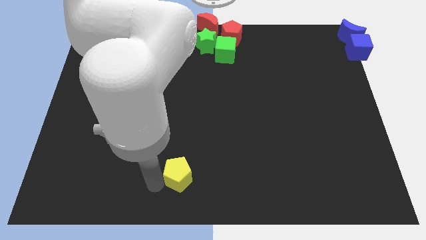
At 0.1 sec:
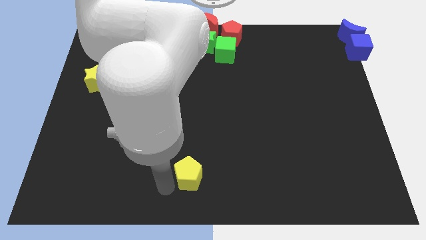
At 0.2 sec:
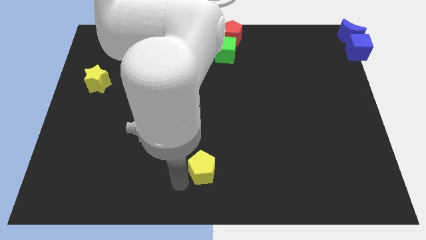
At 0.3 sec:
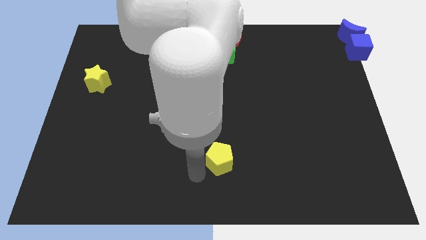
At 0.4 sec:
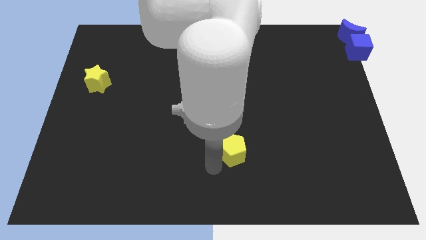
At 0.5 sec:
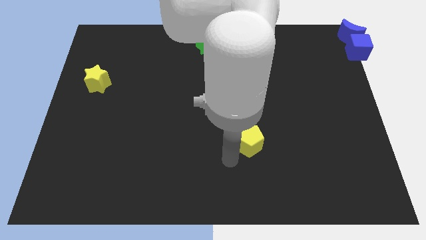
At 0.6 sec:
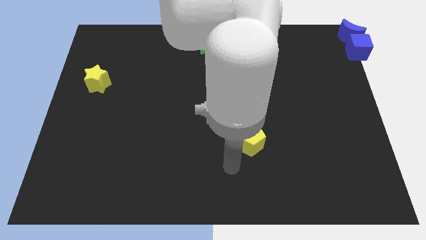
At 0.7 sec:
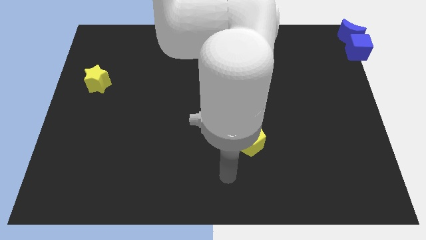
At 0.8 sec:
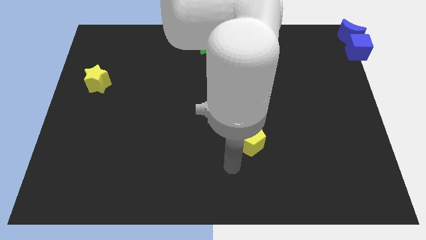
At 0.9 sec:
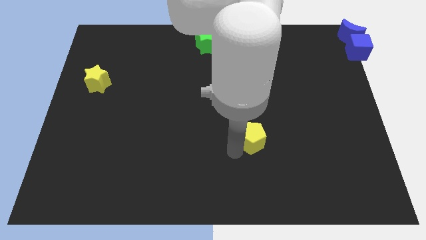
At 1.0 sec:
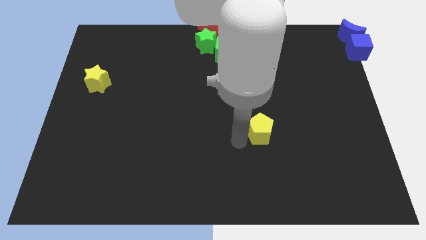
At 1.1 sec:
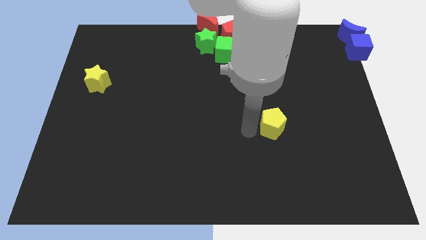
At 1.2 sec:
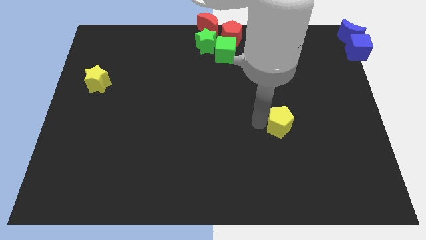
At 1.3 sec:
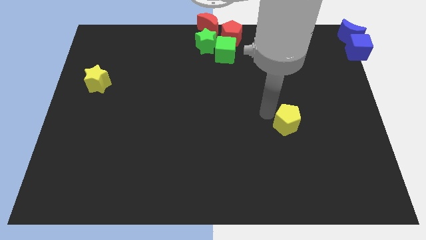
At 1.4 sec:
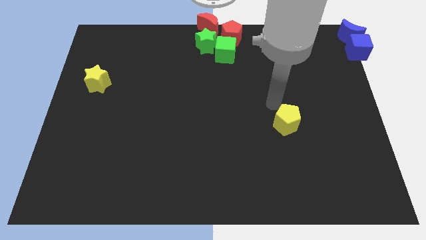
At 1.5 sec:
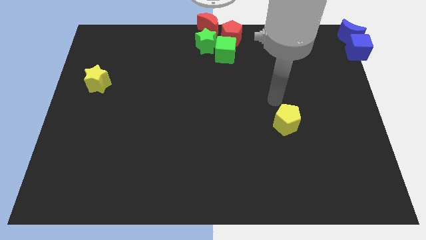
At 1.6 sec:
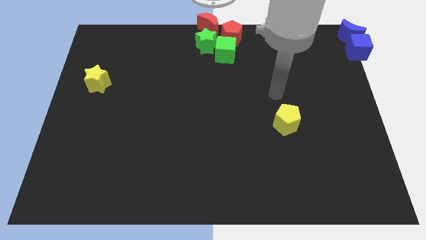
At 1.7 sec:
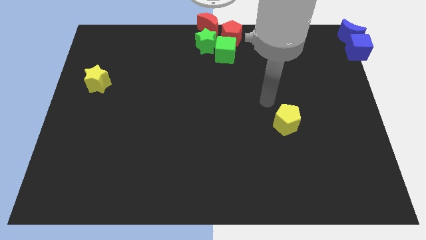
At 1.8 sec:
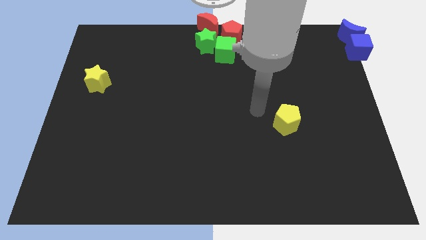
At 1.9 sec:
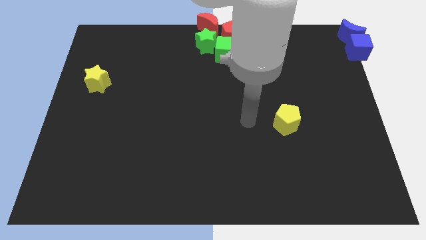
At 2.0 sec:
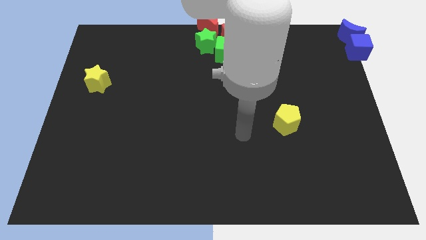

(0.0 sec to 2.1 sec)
push the yellow pentagon towards the right center of the board

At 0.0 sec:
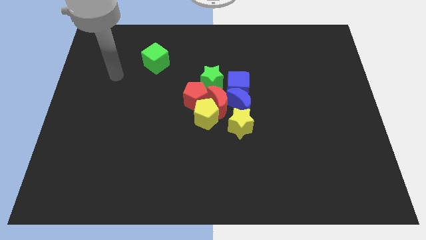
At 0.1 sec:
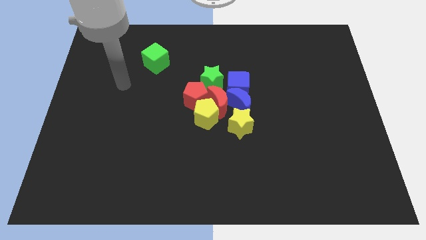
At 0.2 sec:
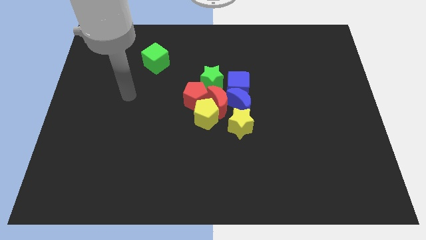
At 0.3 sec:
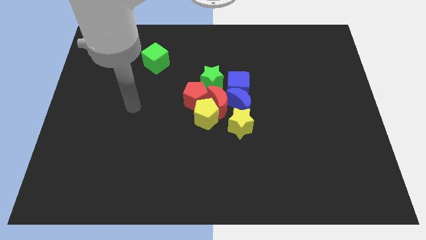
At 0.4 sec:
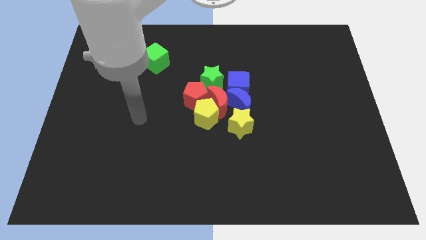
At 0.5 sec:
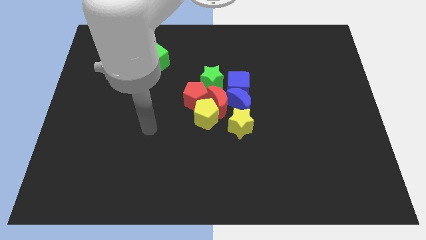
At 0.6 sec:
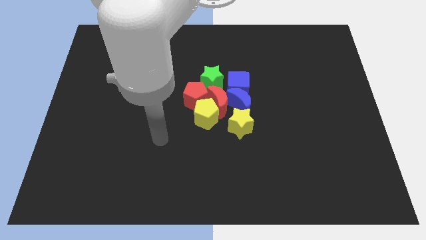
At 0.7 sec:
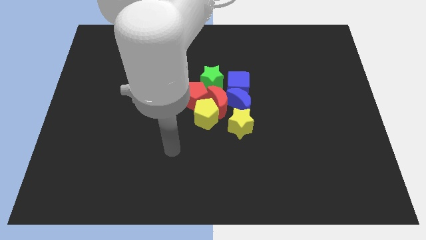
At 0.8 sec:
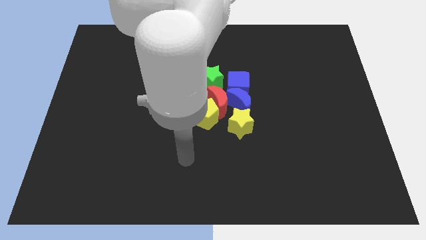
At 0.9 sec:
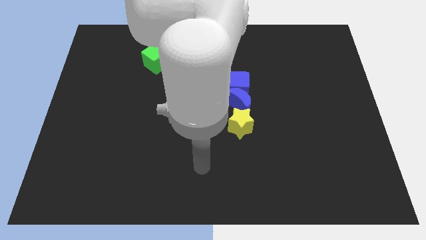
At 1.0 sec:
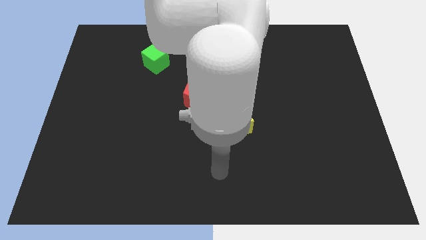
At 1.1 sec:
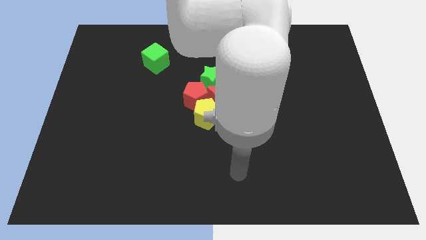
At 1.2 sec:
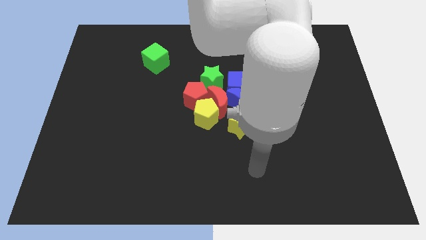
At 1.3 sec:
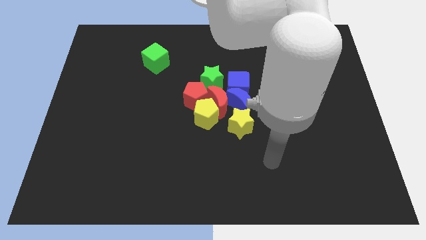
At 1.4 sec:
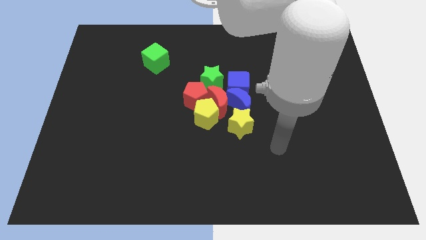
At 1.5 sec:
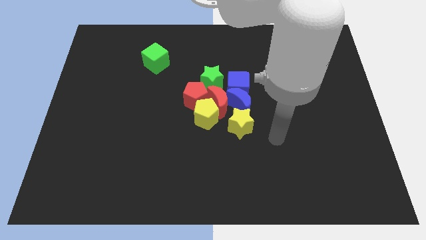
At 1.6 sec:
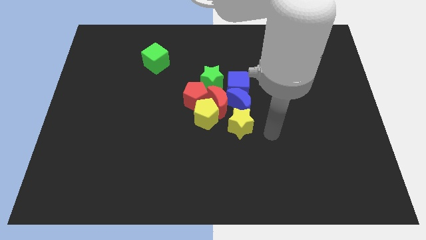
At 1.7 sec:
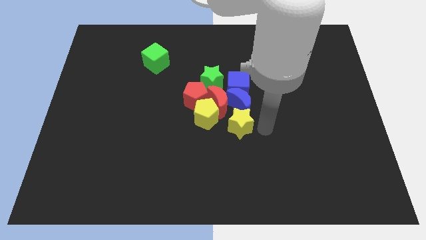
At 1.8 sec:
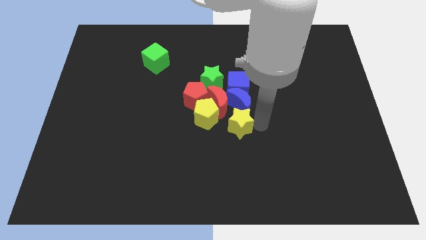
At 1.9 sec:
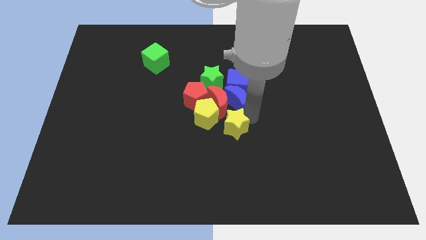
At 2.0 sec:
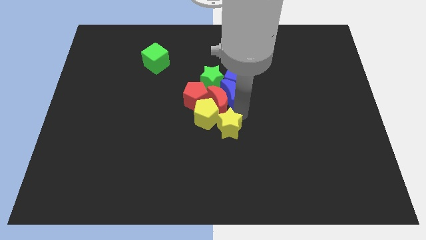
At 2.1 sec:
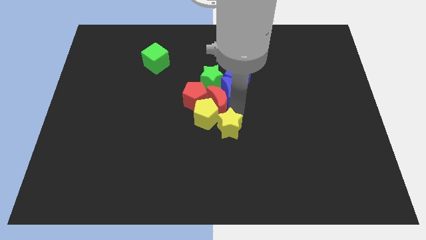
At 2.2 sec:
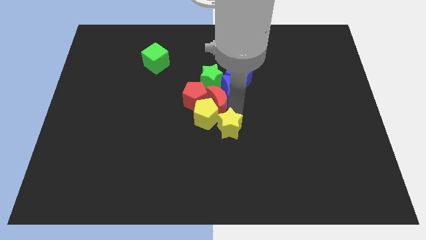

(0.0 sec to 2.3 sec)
push the yellow star slightly to the left

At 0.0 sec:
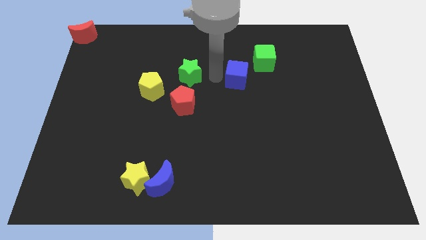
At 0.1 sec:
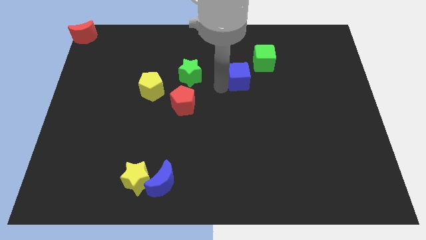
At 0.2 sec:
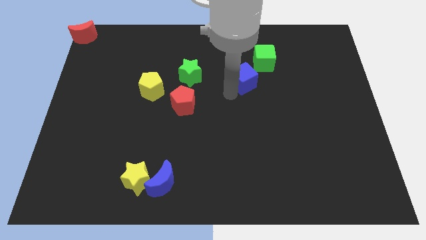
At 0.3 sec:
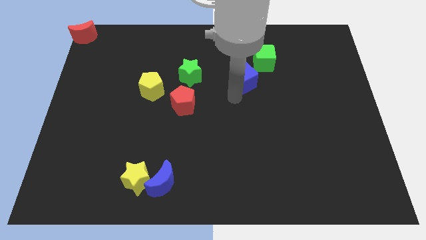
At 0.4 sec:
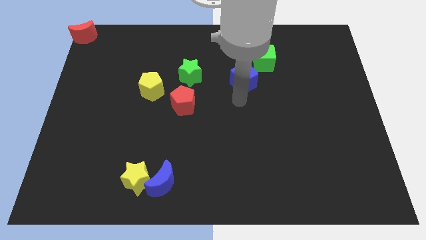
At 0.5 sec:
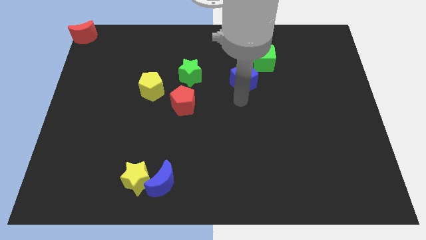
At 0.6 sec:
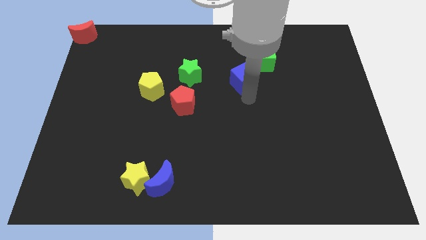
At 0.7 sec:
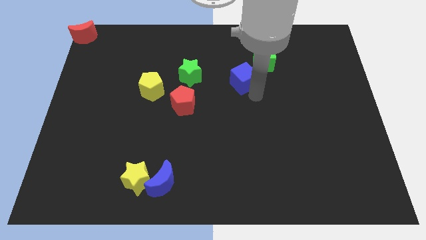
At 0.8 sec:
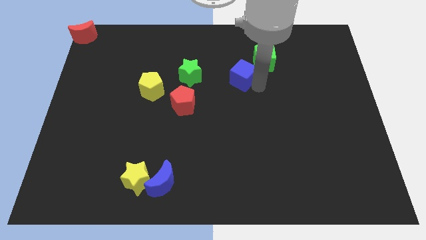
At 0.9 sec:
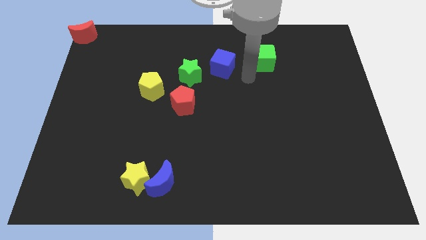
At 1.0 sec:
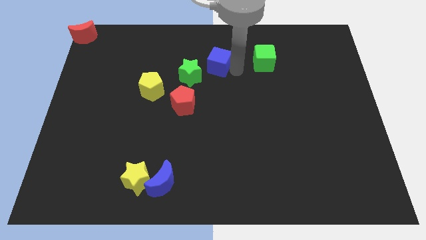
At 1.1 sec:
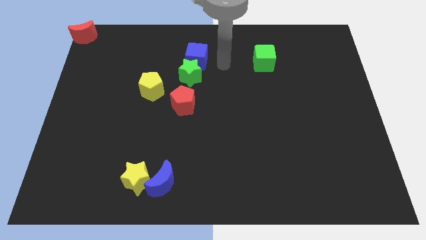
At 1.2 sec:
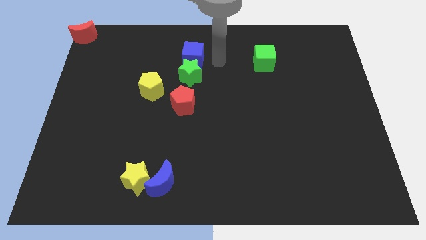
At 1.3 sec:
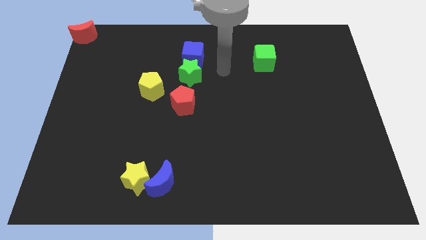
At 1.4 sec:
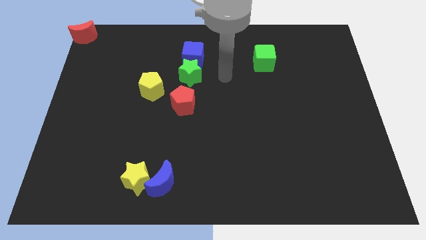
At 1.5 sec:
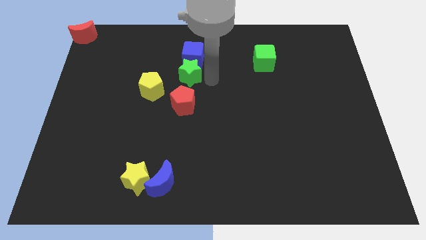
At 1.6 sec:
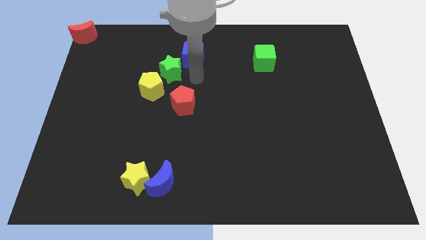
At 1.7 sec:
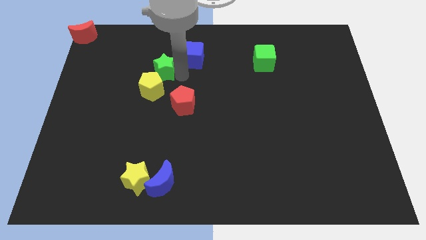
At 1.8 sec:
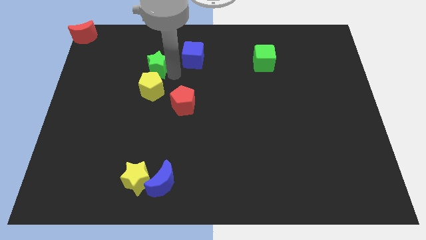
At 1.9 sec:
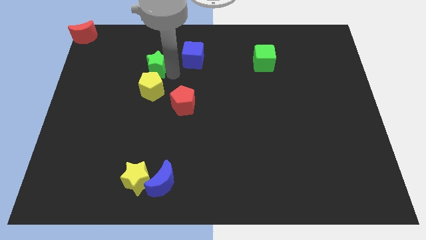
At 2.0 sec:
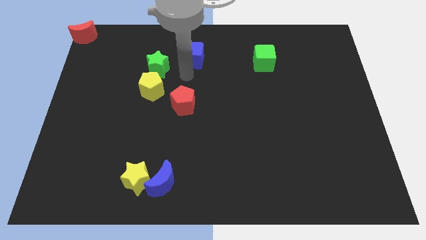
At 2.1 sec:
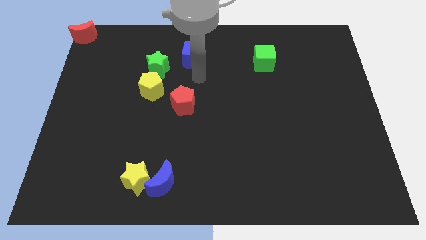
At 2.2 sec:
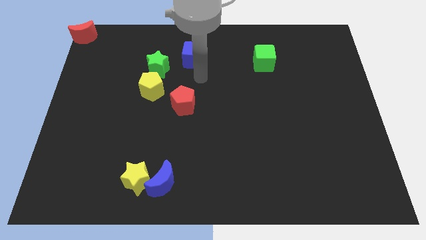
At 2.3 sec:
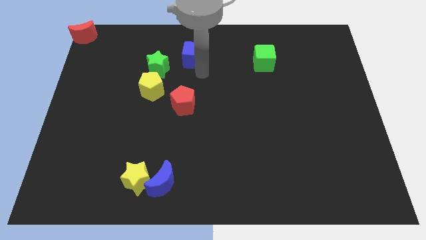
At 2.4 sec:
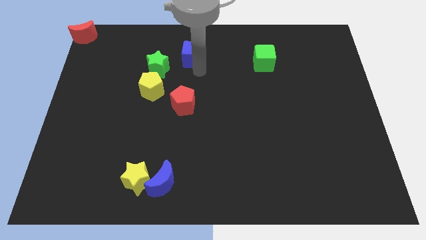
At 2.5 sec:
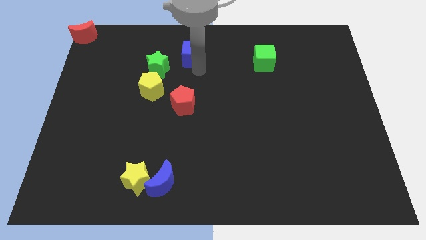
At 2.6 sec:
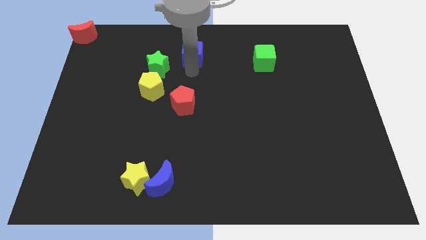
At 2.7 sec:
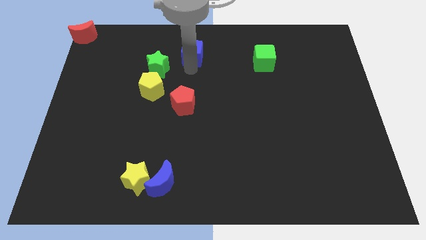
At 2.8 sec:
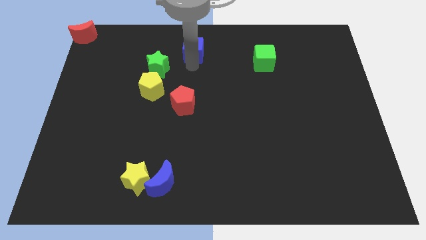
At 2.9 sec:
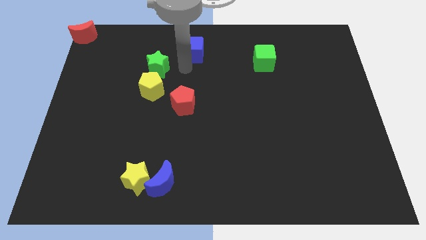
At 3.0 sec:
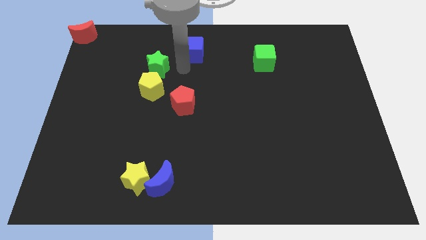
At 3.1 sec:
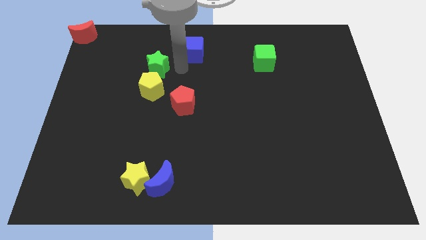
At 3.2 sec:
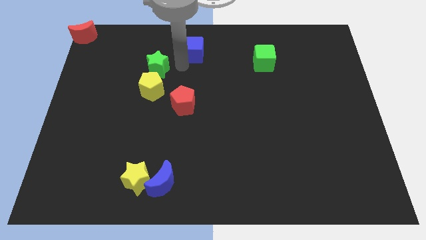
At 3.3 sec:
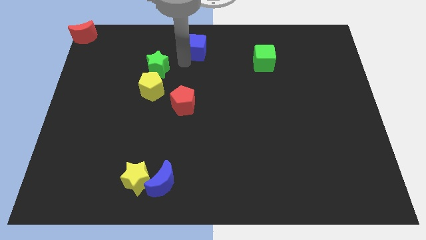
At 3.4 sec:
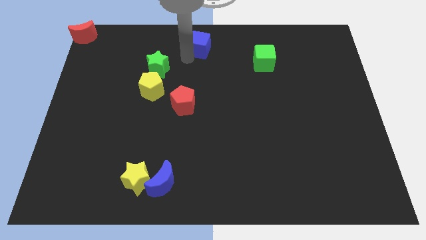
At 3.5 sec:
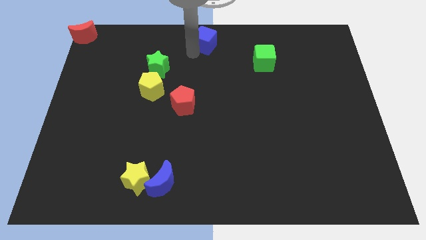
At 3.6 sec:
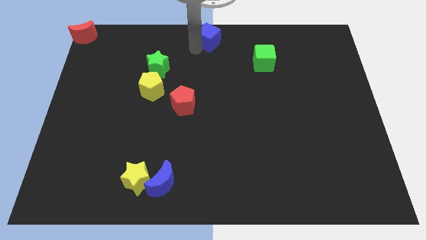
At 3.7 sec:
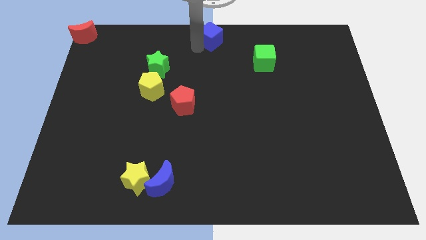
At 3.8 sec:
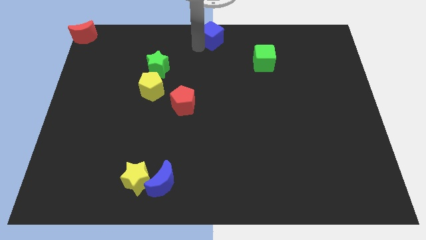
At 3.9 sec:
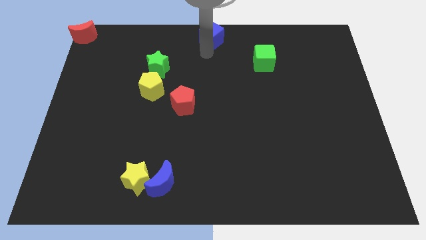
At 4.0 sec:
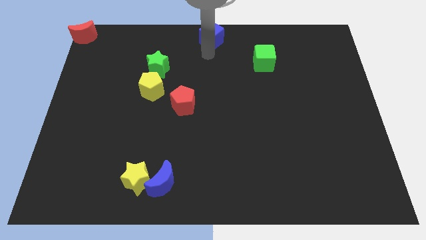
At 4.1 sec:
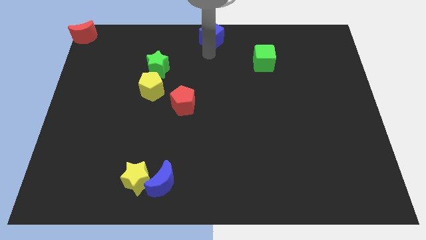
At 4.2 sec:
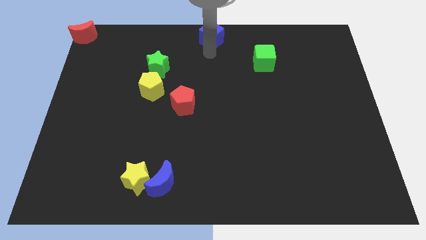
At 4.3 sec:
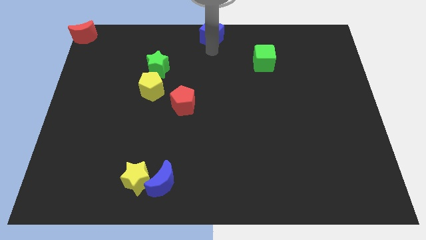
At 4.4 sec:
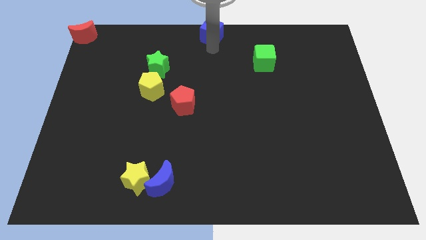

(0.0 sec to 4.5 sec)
push the blue cube to the top centre of the board
